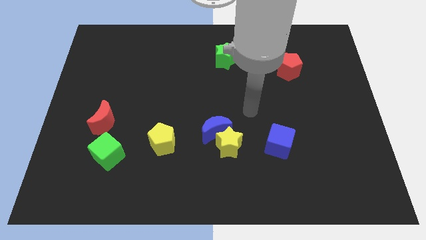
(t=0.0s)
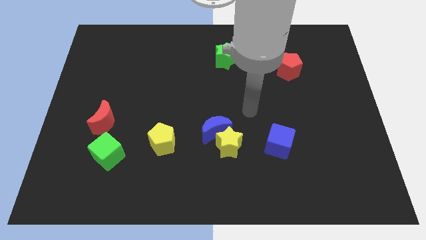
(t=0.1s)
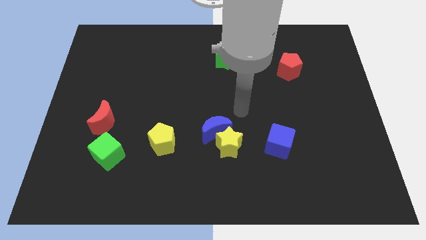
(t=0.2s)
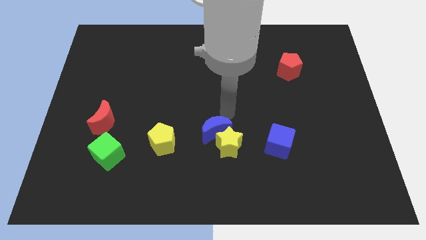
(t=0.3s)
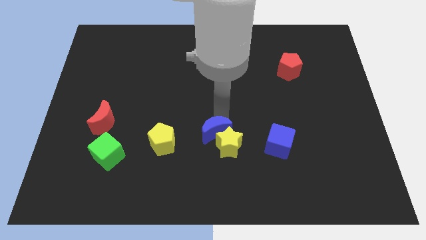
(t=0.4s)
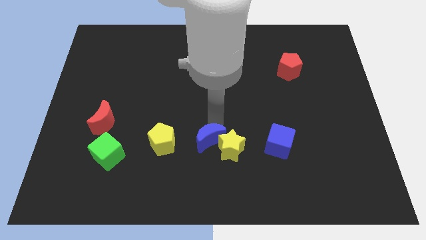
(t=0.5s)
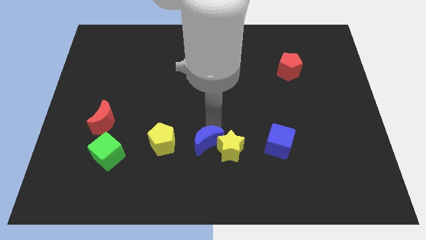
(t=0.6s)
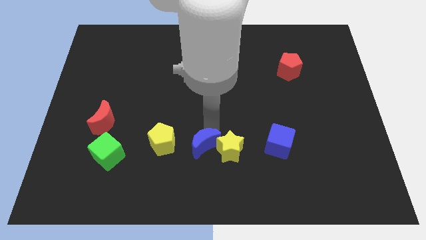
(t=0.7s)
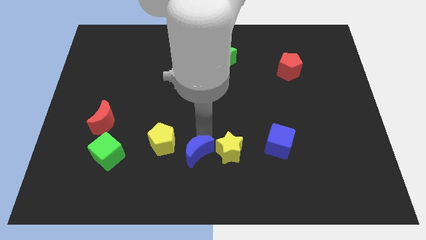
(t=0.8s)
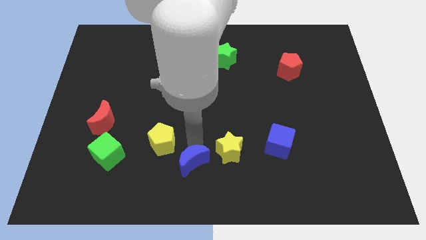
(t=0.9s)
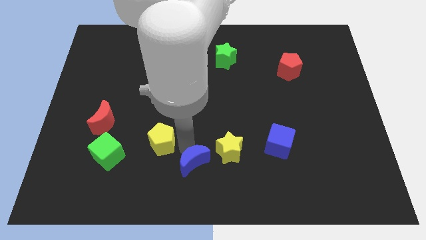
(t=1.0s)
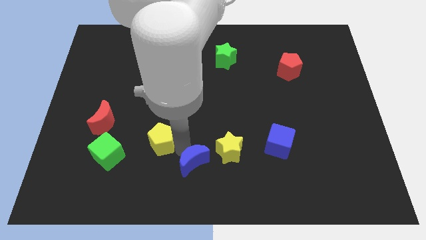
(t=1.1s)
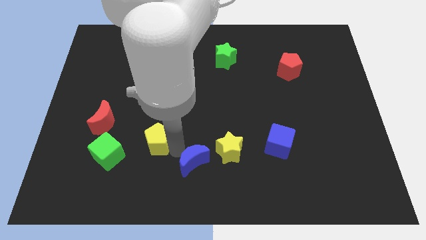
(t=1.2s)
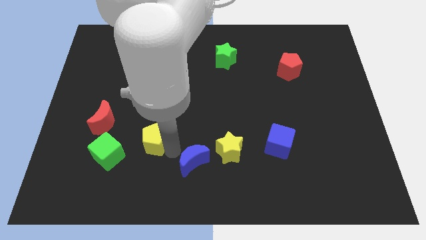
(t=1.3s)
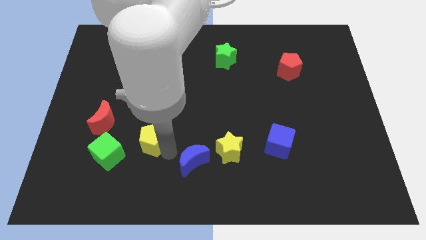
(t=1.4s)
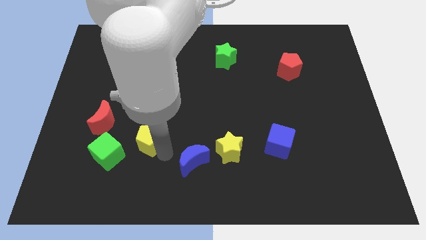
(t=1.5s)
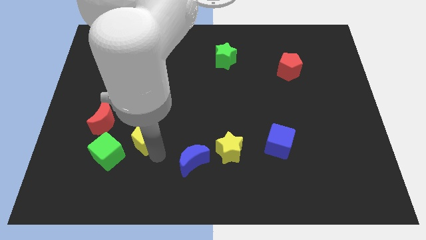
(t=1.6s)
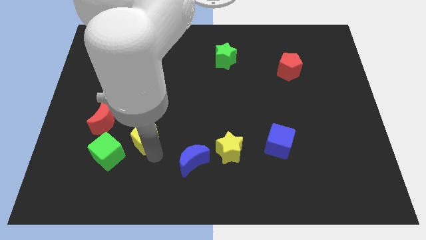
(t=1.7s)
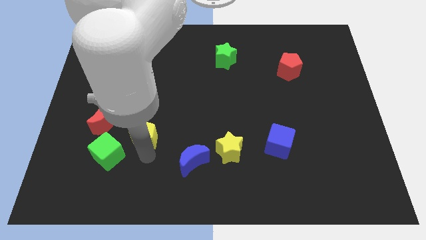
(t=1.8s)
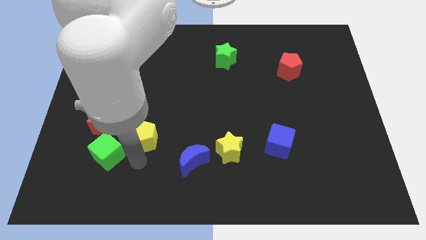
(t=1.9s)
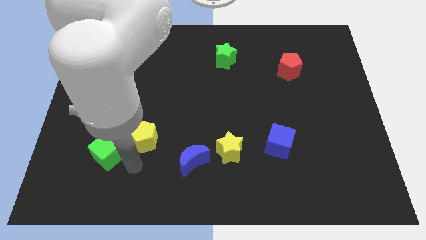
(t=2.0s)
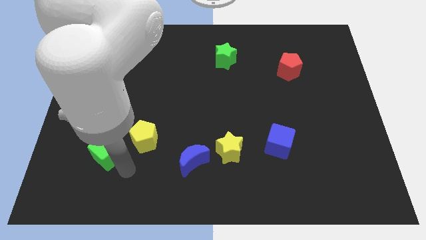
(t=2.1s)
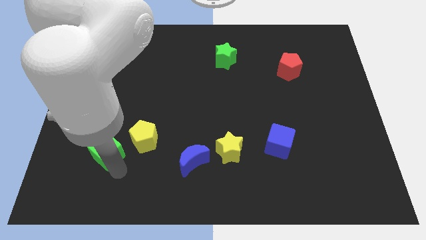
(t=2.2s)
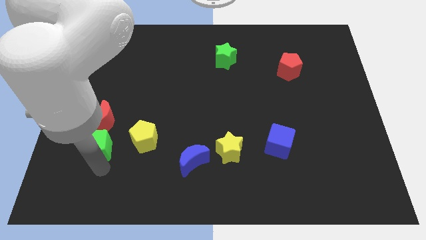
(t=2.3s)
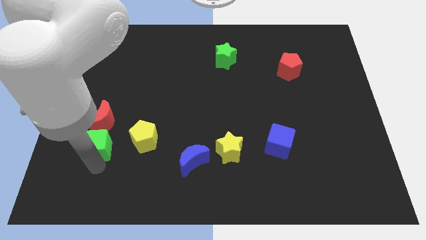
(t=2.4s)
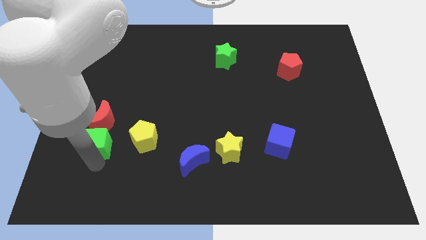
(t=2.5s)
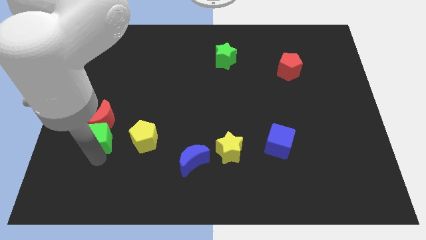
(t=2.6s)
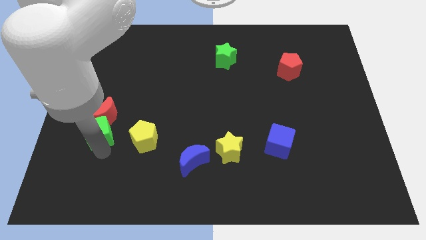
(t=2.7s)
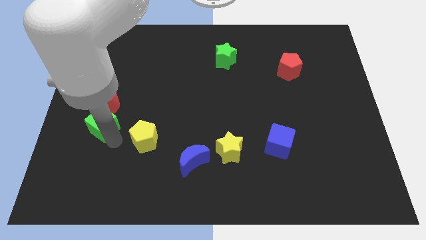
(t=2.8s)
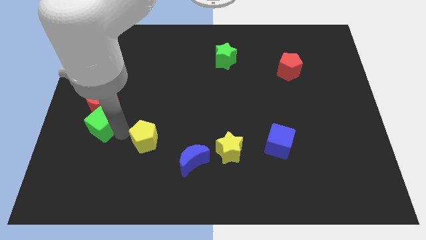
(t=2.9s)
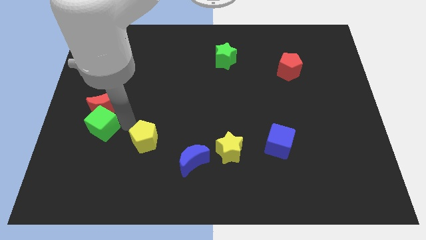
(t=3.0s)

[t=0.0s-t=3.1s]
push the green cube into red moon

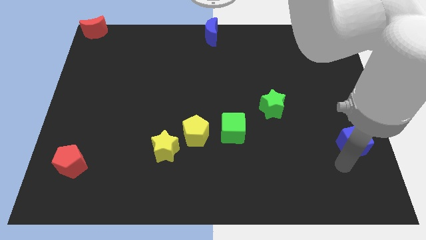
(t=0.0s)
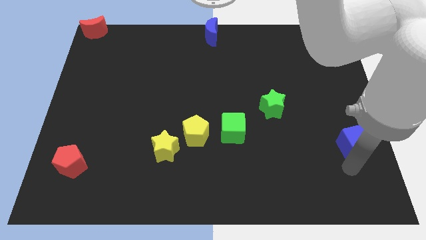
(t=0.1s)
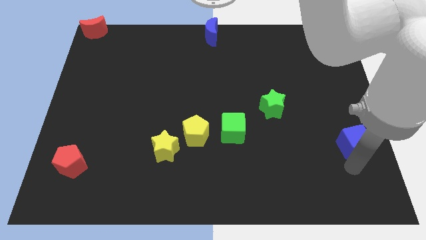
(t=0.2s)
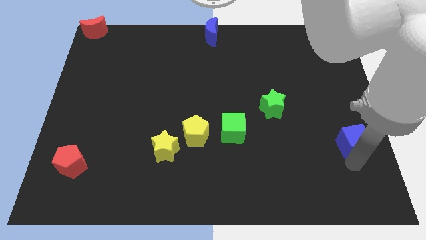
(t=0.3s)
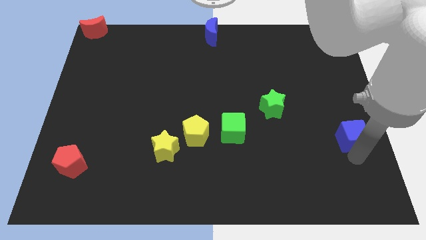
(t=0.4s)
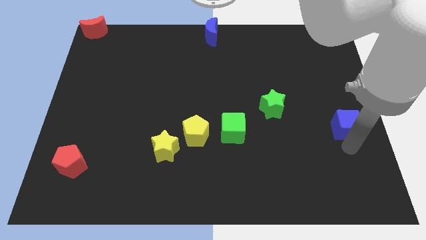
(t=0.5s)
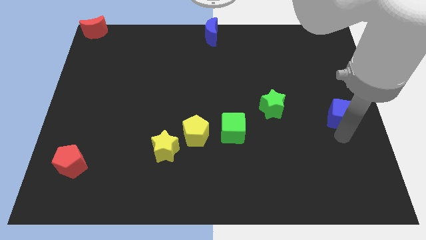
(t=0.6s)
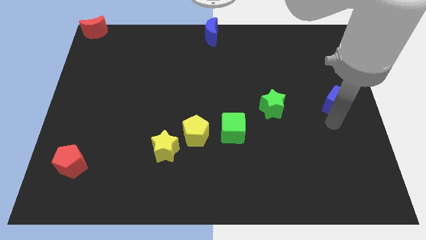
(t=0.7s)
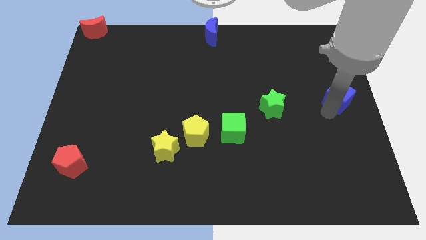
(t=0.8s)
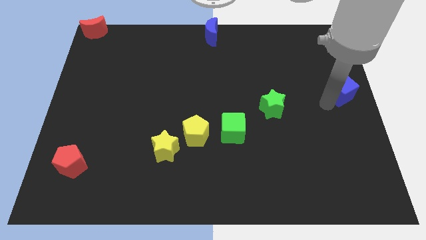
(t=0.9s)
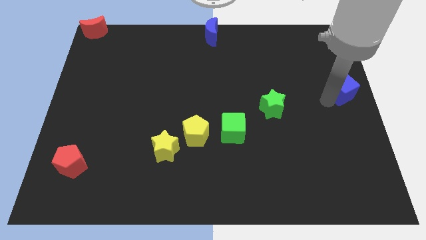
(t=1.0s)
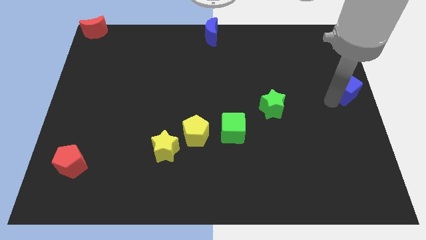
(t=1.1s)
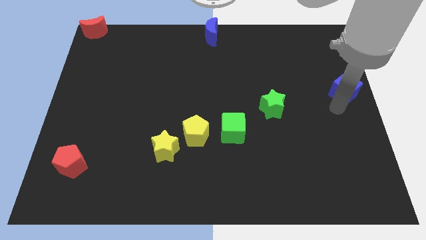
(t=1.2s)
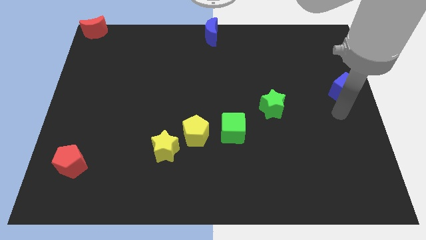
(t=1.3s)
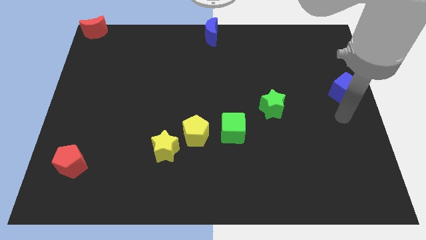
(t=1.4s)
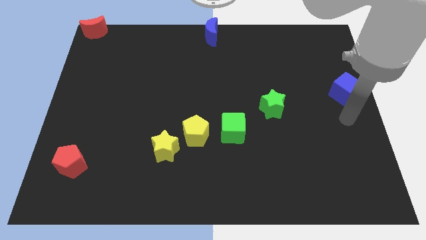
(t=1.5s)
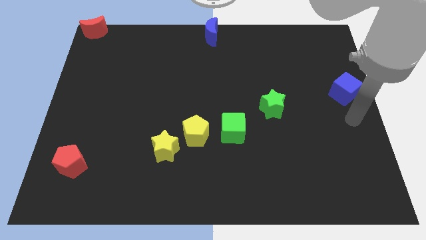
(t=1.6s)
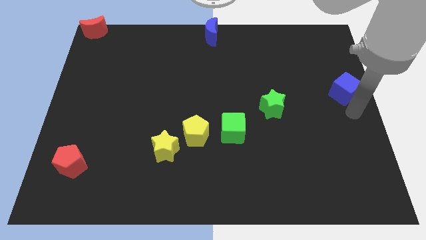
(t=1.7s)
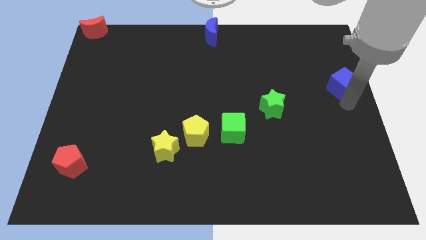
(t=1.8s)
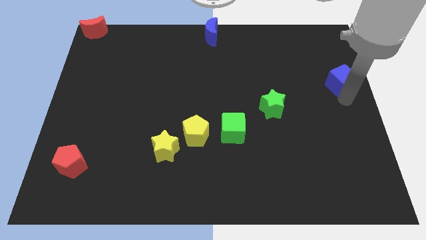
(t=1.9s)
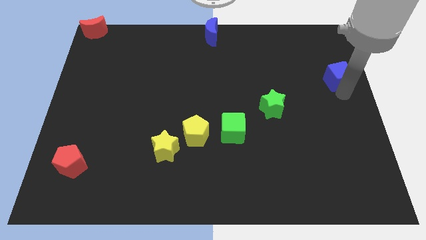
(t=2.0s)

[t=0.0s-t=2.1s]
move the blue cube diagonally top right to the green star

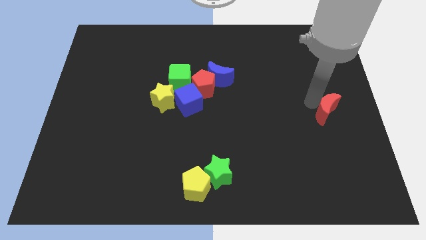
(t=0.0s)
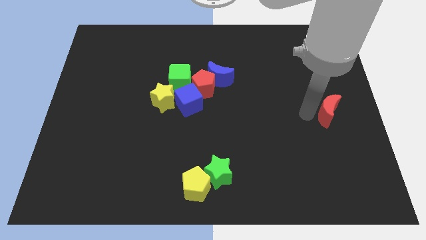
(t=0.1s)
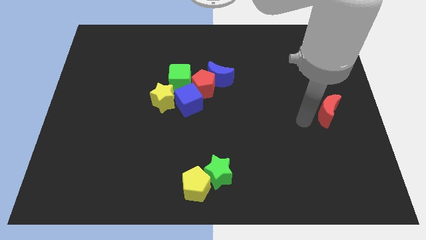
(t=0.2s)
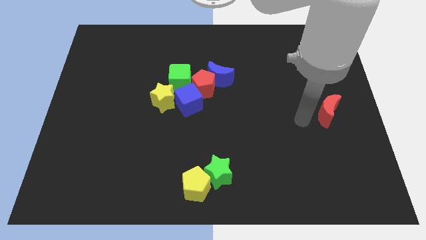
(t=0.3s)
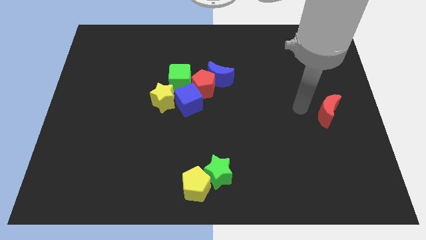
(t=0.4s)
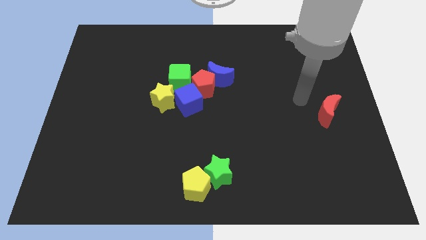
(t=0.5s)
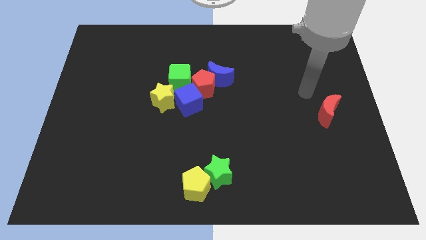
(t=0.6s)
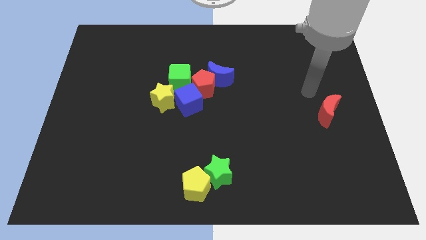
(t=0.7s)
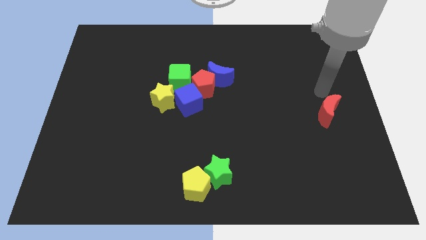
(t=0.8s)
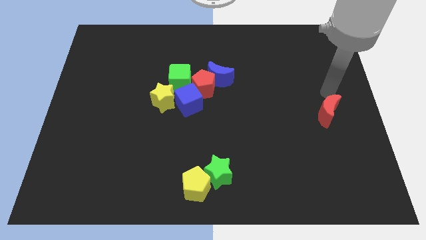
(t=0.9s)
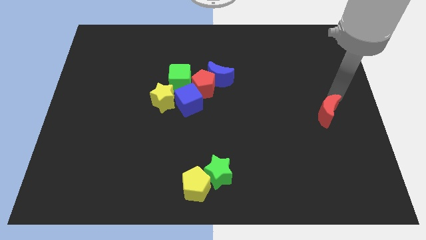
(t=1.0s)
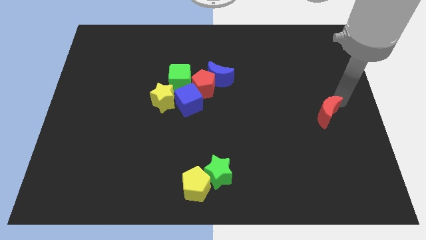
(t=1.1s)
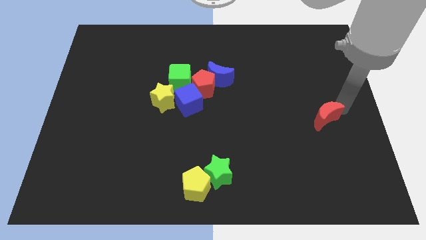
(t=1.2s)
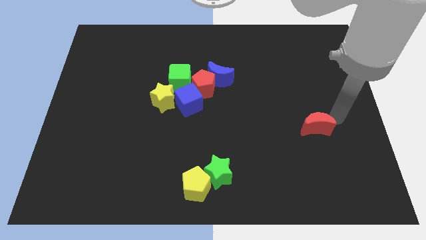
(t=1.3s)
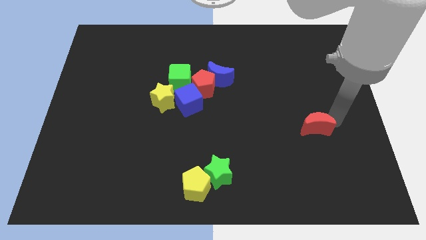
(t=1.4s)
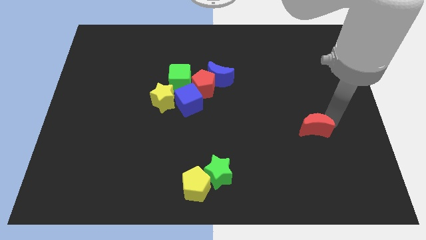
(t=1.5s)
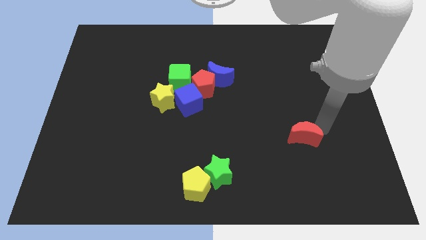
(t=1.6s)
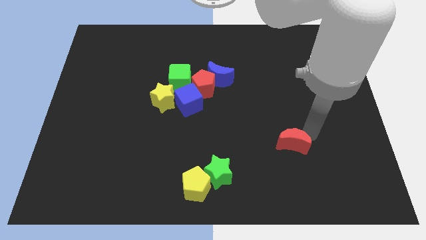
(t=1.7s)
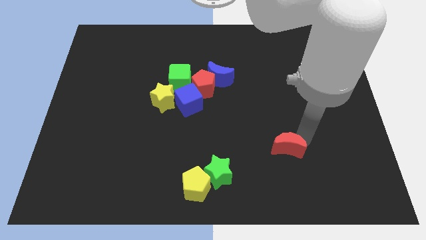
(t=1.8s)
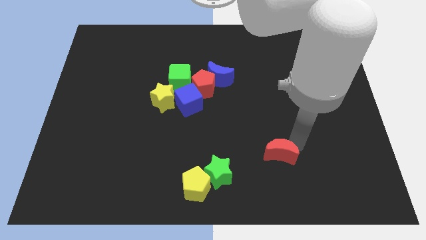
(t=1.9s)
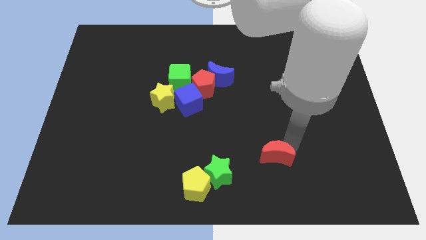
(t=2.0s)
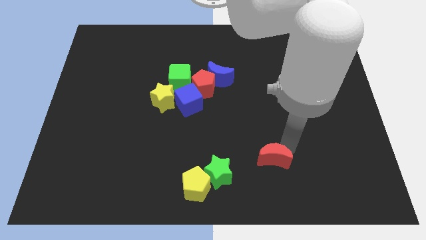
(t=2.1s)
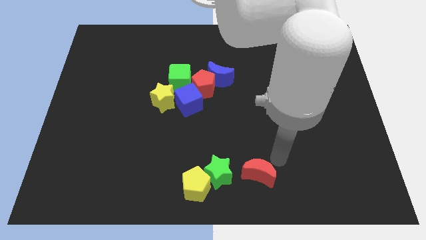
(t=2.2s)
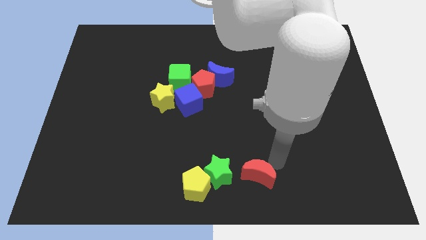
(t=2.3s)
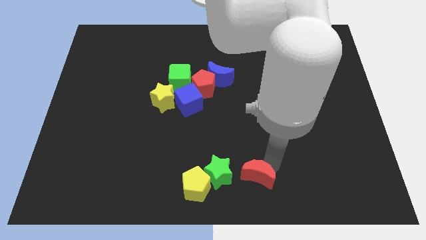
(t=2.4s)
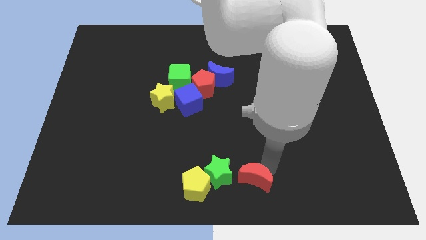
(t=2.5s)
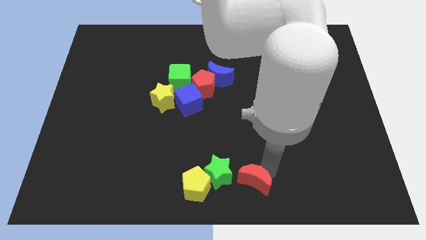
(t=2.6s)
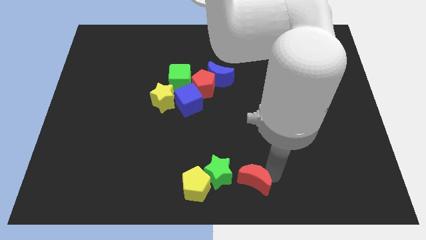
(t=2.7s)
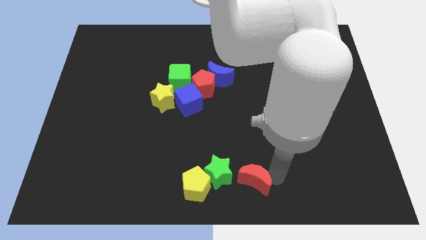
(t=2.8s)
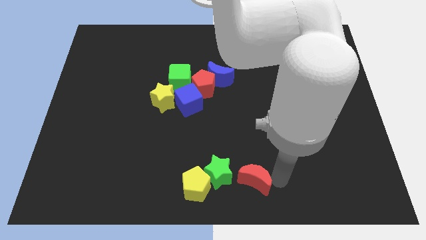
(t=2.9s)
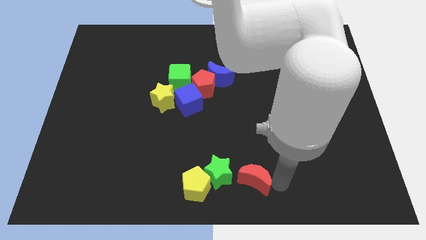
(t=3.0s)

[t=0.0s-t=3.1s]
place red crescent right side of the green star

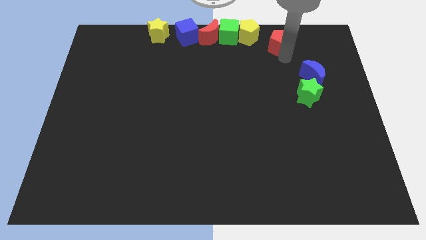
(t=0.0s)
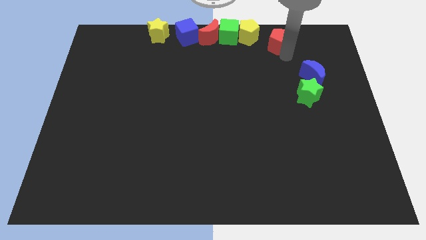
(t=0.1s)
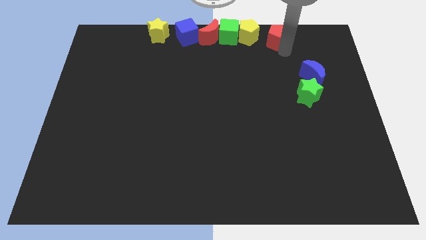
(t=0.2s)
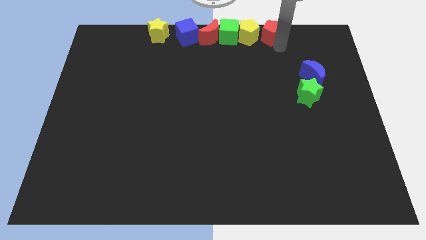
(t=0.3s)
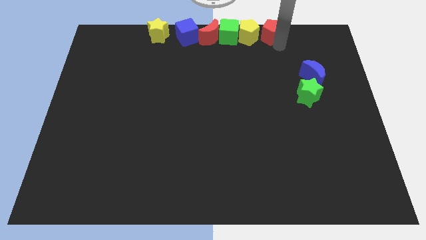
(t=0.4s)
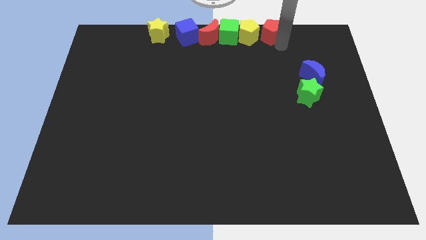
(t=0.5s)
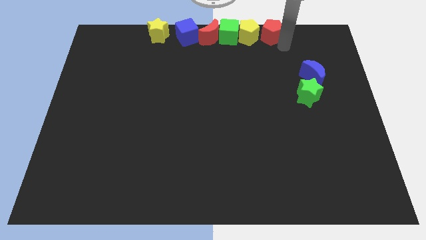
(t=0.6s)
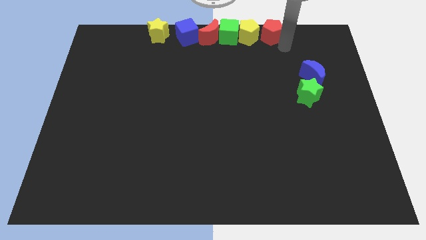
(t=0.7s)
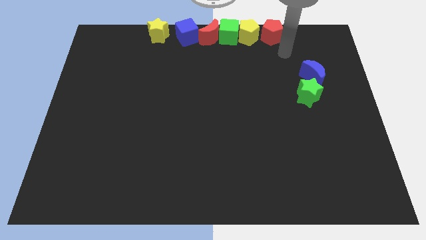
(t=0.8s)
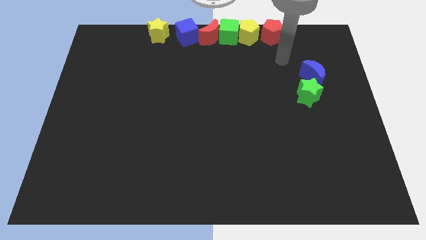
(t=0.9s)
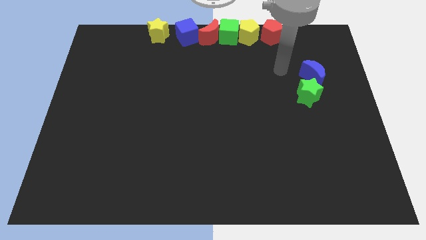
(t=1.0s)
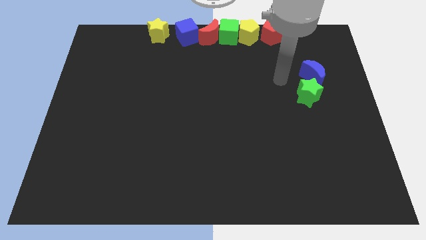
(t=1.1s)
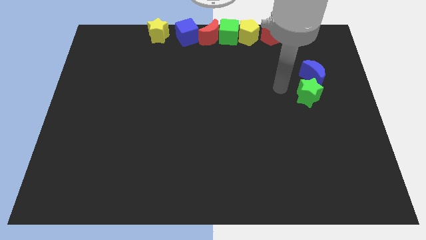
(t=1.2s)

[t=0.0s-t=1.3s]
drag the red pentagon to the right side of the yellow pentagon
